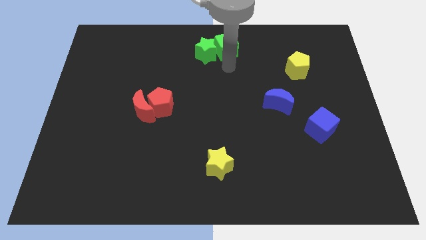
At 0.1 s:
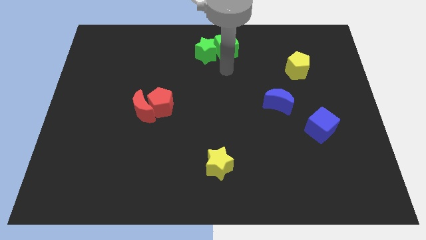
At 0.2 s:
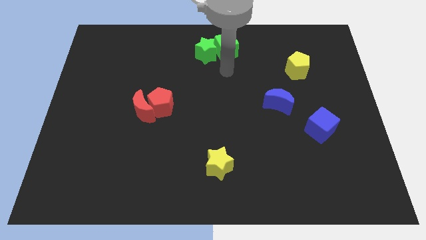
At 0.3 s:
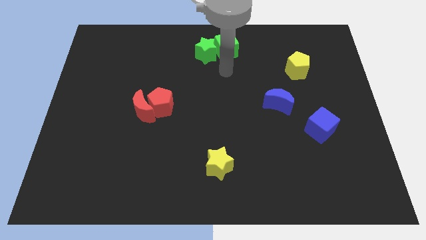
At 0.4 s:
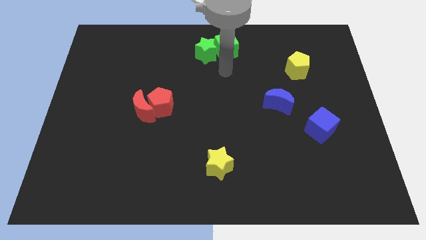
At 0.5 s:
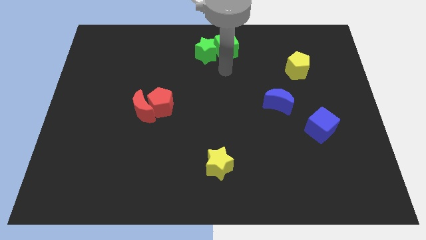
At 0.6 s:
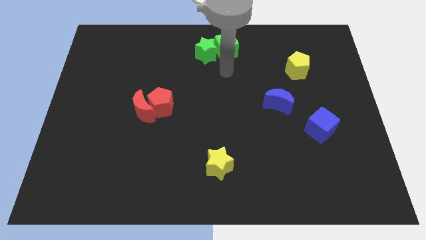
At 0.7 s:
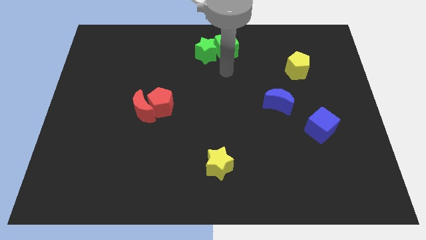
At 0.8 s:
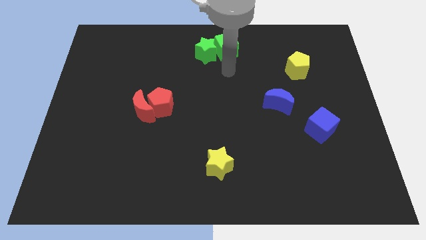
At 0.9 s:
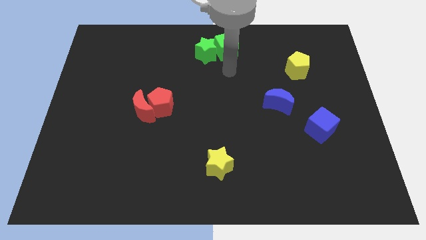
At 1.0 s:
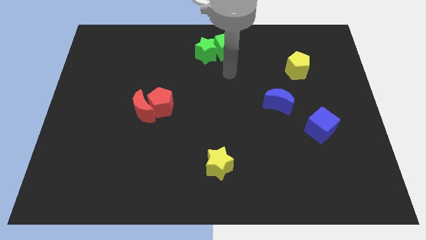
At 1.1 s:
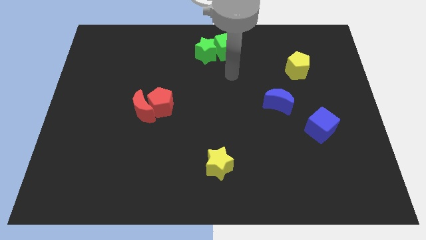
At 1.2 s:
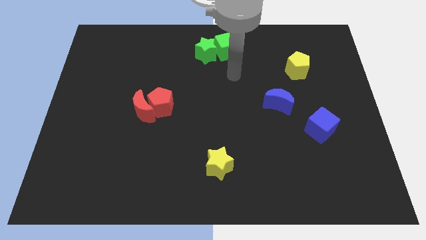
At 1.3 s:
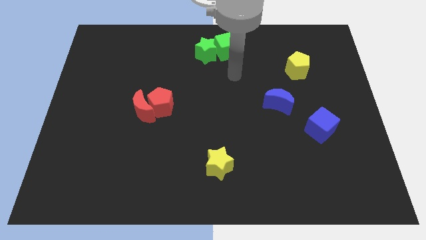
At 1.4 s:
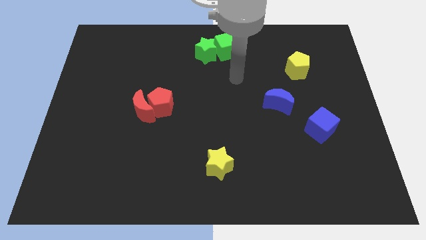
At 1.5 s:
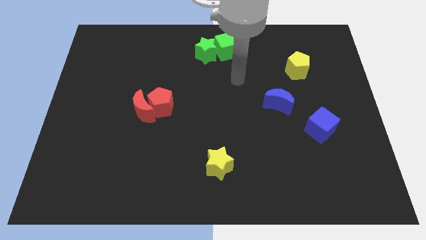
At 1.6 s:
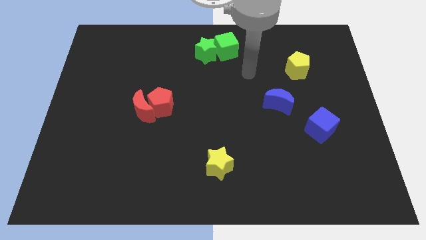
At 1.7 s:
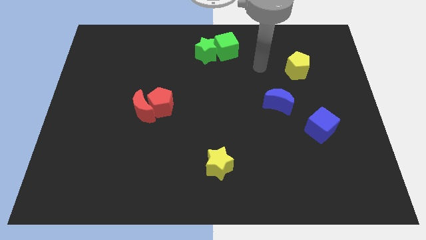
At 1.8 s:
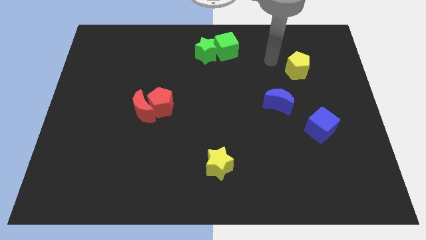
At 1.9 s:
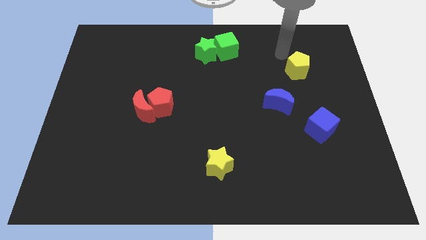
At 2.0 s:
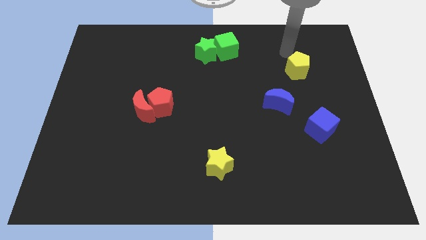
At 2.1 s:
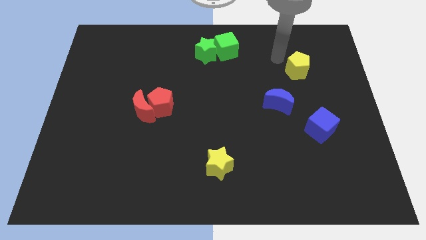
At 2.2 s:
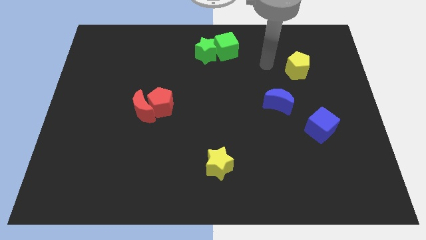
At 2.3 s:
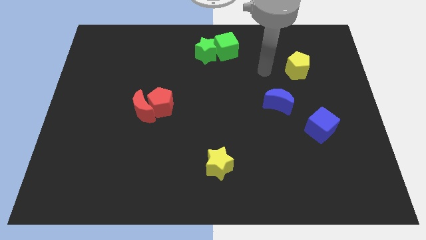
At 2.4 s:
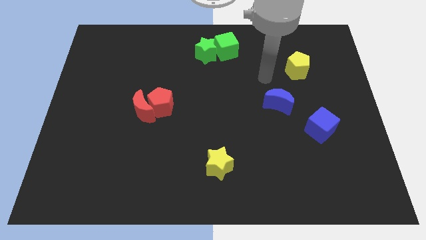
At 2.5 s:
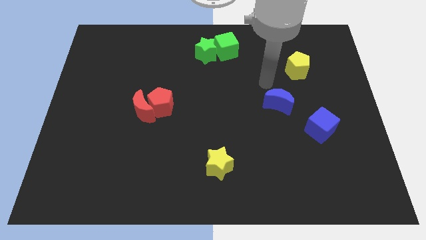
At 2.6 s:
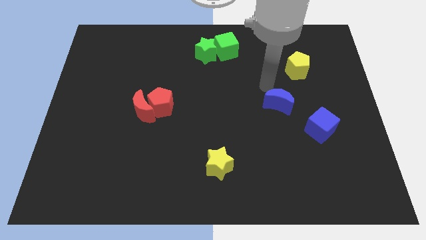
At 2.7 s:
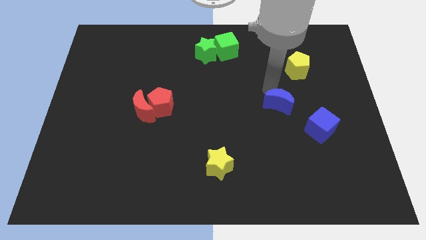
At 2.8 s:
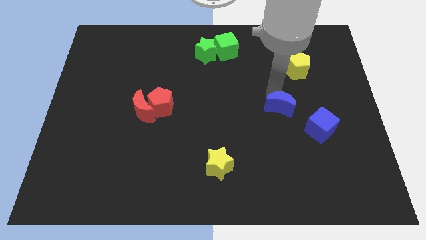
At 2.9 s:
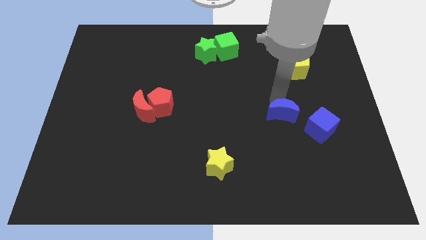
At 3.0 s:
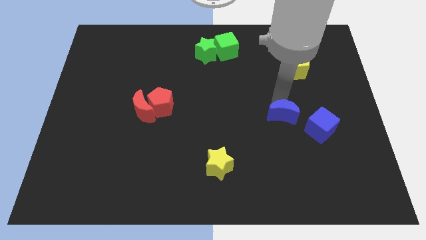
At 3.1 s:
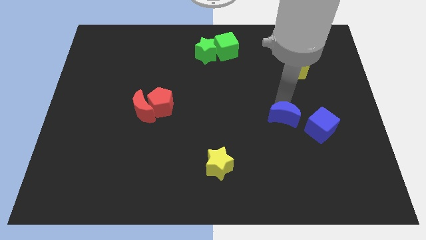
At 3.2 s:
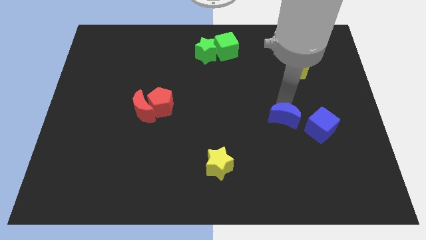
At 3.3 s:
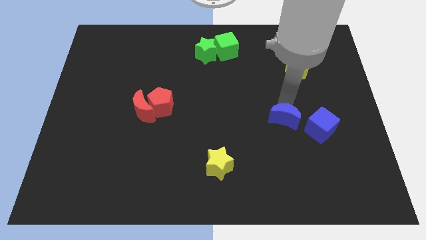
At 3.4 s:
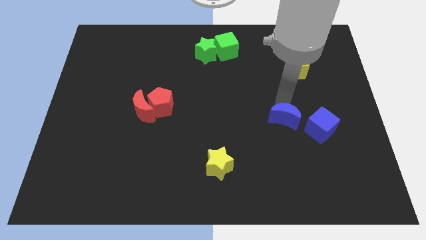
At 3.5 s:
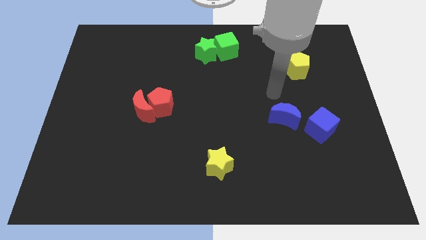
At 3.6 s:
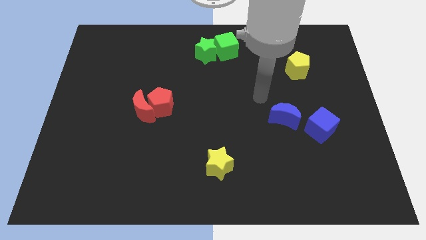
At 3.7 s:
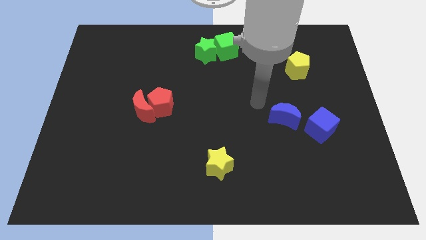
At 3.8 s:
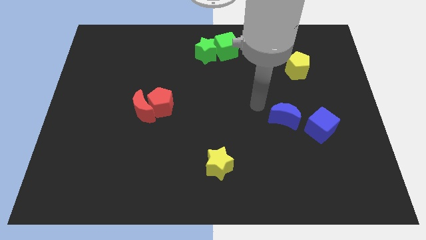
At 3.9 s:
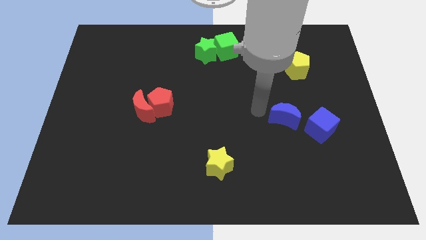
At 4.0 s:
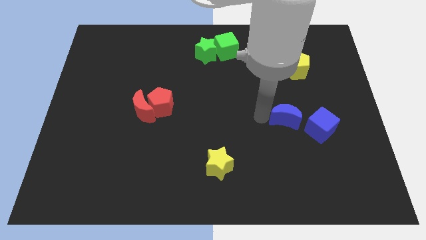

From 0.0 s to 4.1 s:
place the blue moon to the left of the blue cube

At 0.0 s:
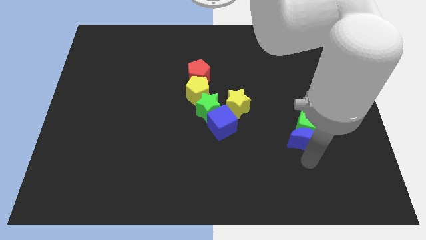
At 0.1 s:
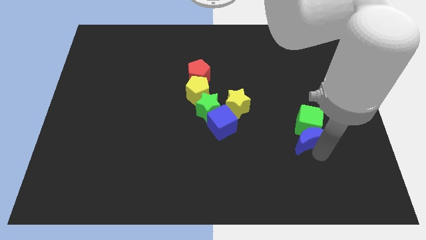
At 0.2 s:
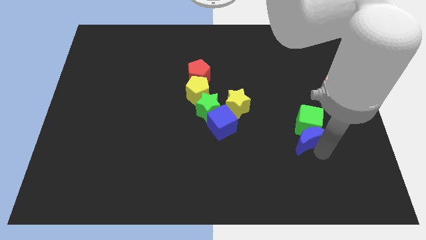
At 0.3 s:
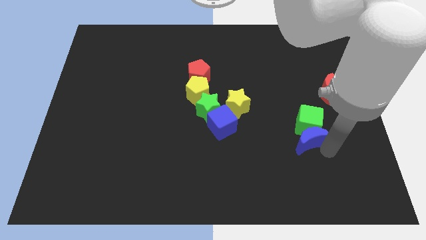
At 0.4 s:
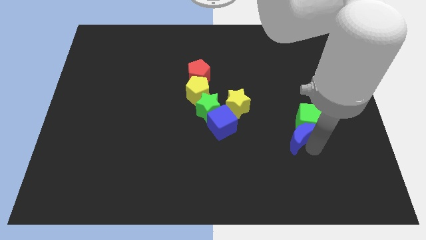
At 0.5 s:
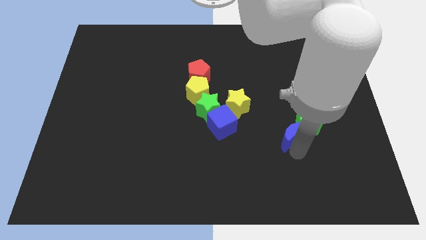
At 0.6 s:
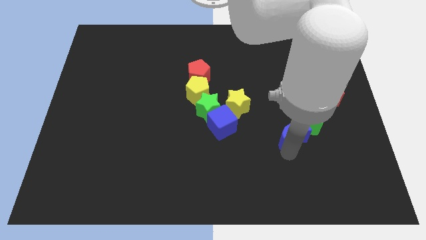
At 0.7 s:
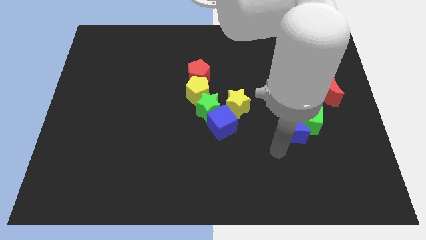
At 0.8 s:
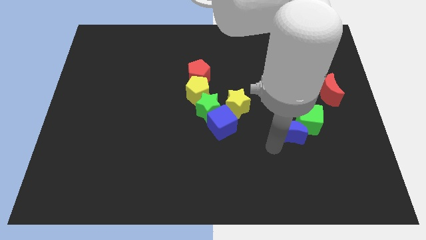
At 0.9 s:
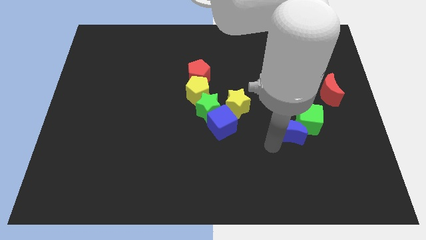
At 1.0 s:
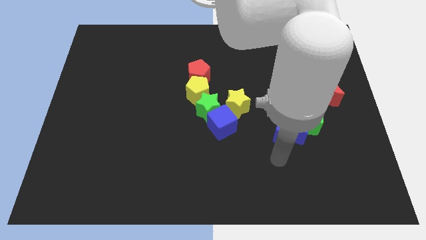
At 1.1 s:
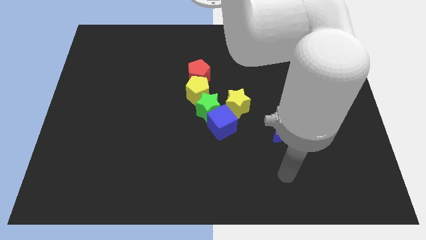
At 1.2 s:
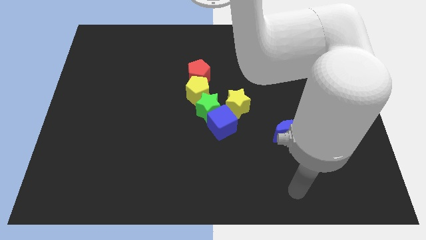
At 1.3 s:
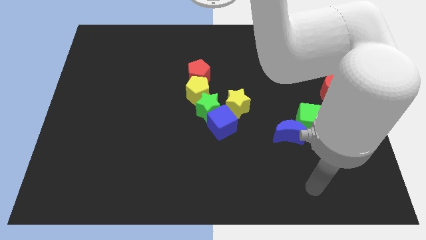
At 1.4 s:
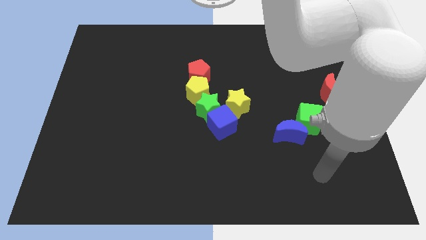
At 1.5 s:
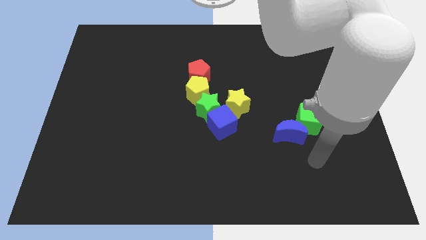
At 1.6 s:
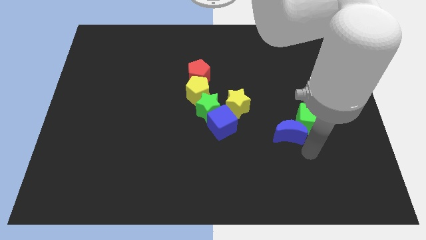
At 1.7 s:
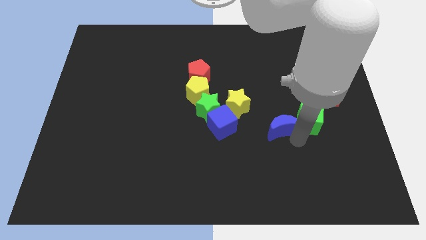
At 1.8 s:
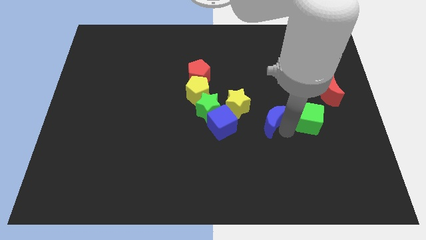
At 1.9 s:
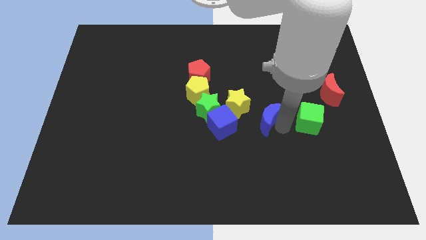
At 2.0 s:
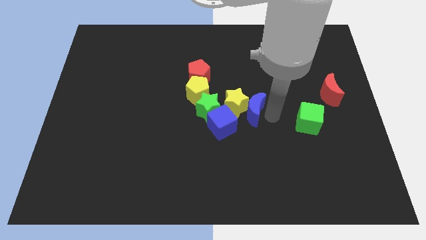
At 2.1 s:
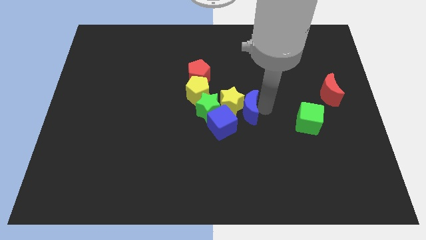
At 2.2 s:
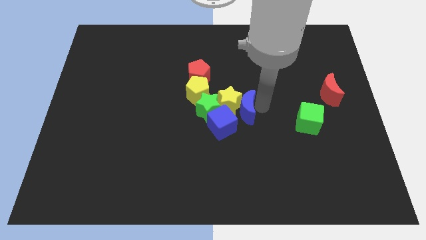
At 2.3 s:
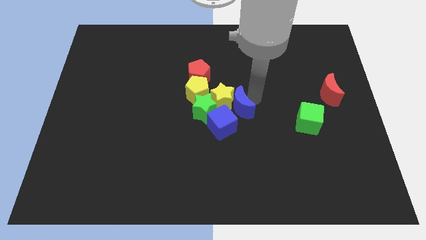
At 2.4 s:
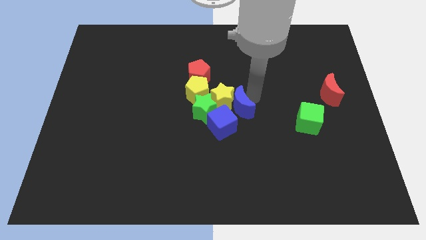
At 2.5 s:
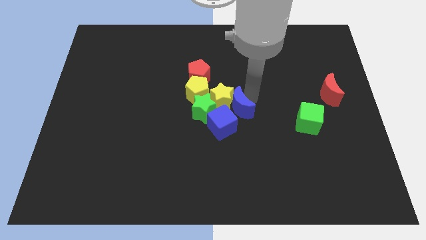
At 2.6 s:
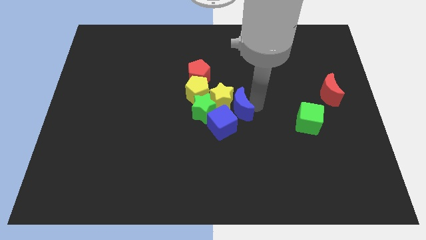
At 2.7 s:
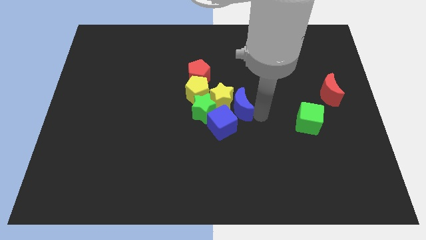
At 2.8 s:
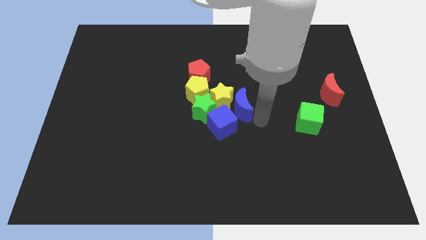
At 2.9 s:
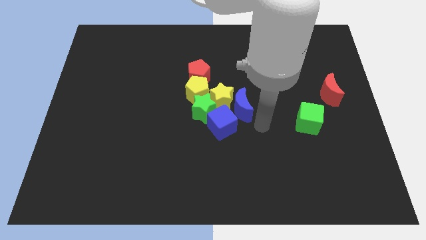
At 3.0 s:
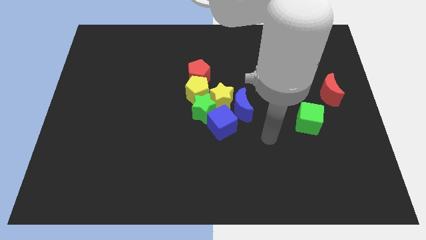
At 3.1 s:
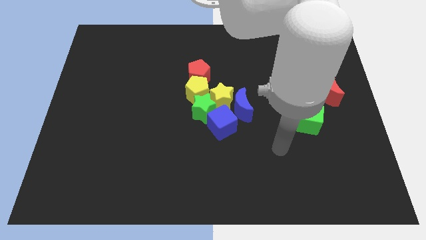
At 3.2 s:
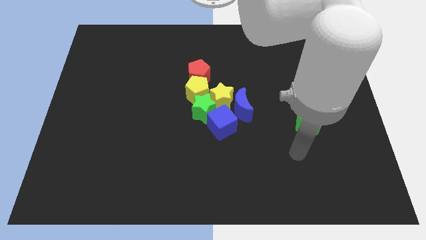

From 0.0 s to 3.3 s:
push the blue moon to bottom right of yellow star

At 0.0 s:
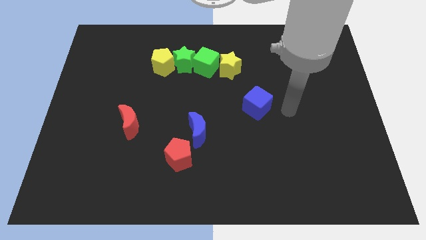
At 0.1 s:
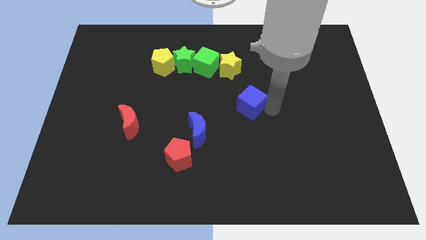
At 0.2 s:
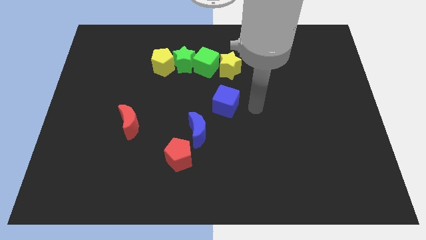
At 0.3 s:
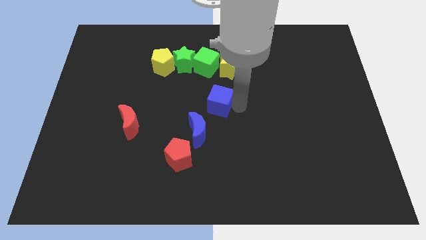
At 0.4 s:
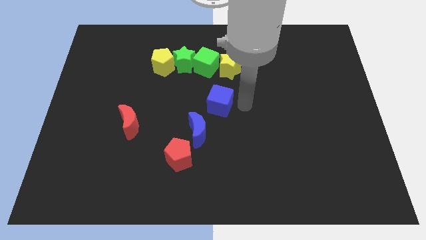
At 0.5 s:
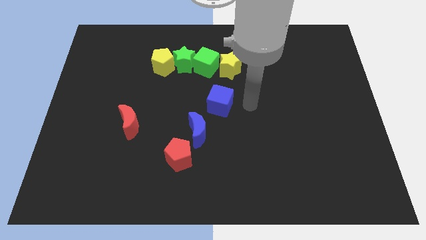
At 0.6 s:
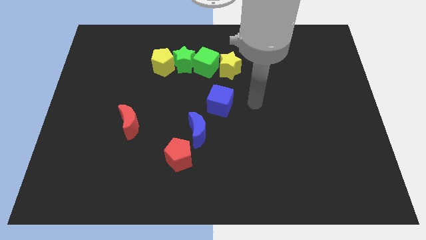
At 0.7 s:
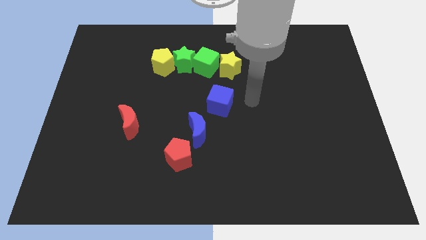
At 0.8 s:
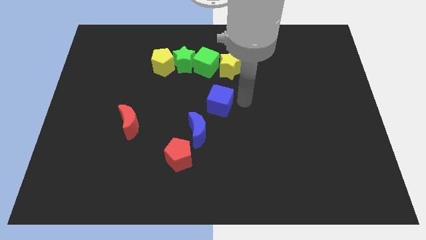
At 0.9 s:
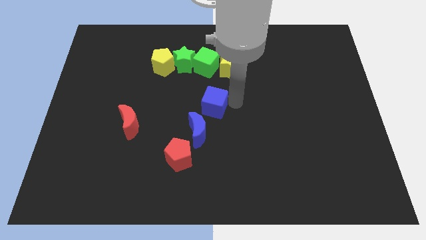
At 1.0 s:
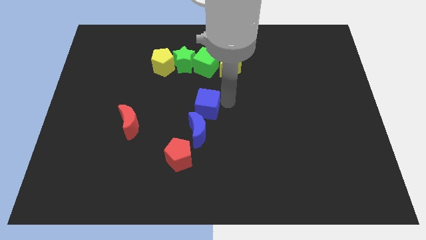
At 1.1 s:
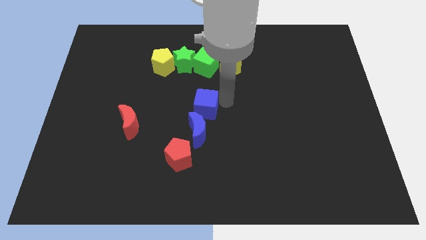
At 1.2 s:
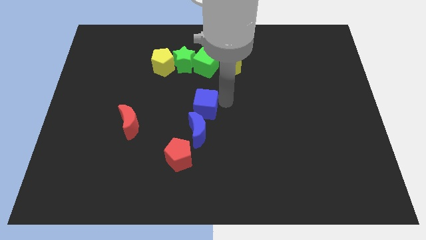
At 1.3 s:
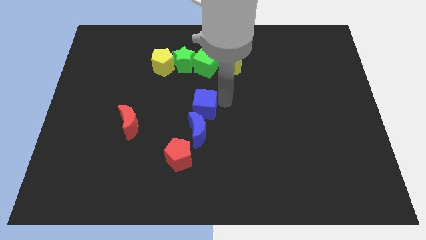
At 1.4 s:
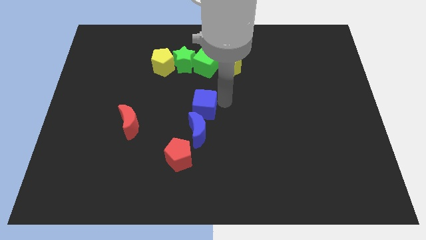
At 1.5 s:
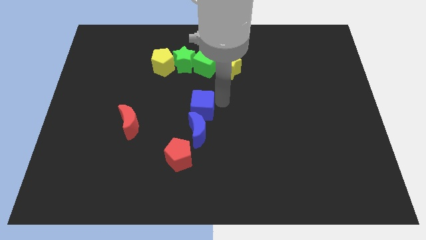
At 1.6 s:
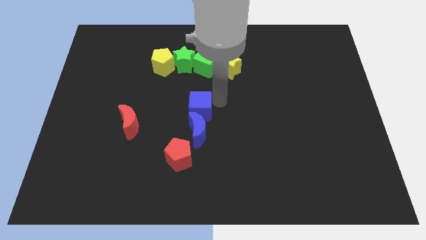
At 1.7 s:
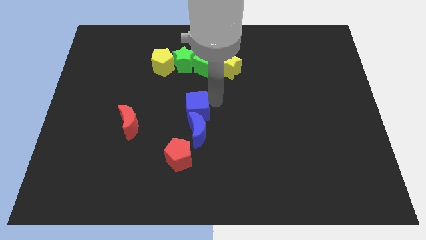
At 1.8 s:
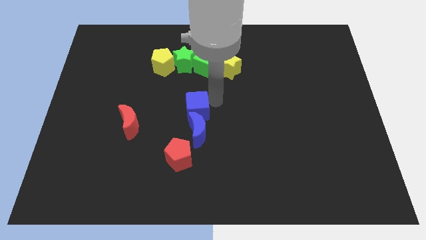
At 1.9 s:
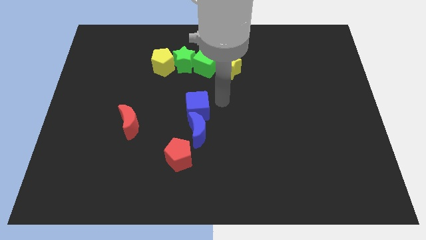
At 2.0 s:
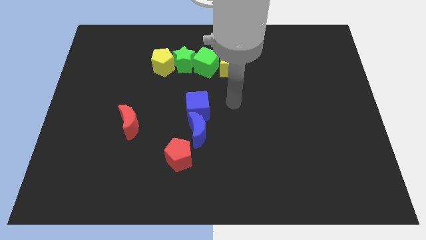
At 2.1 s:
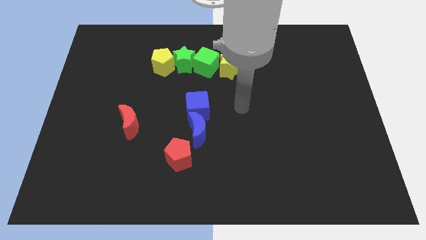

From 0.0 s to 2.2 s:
move blue cube to the top of the blue crescent
